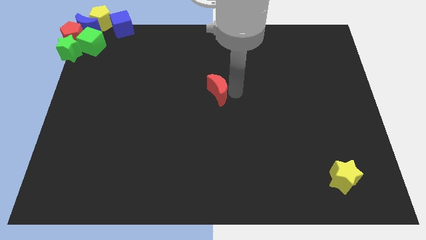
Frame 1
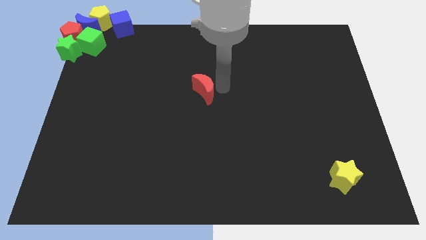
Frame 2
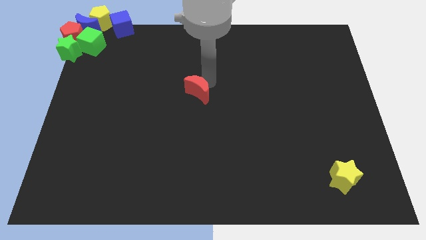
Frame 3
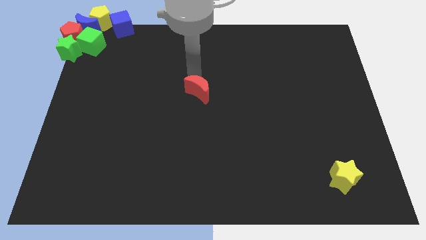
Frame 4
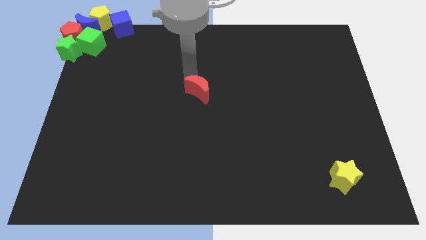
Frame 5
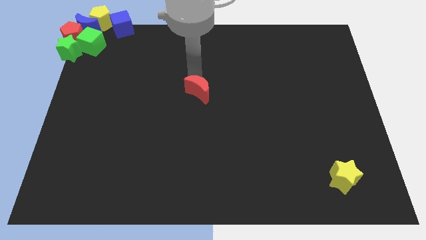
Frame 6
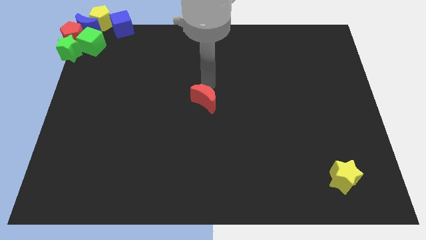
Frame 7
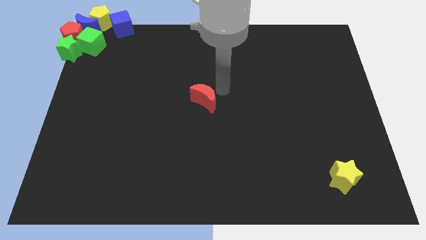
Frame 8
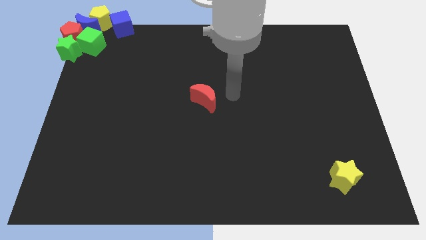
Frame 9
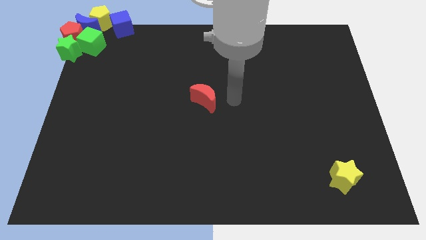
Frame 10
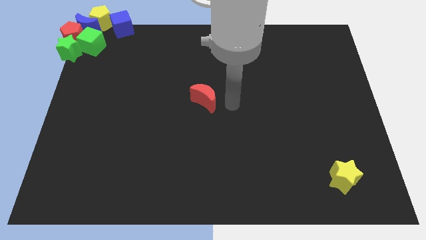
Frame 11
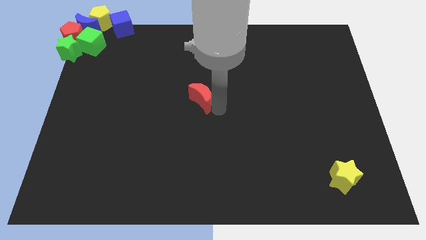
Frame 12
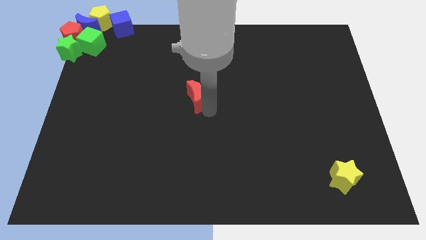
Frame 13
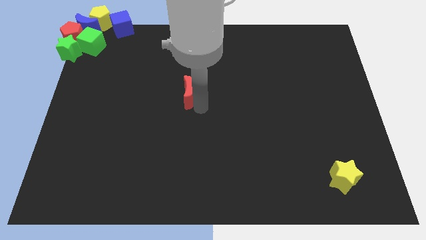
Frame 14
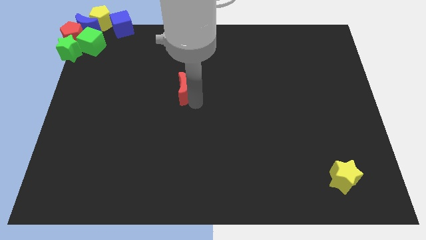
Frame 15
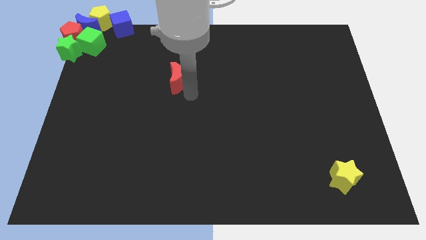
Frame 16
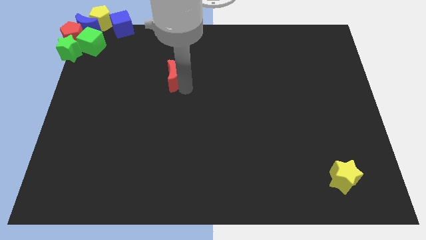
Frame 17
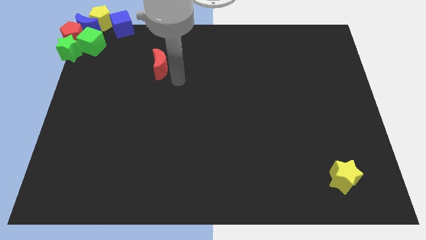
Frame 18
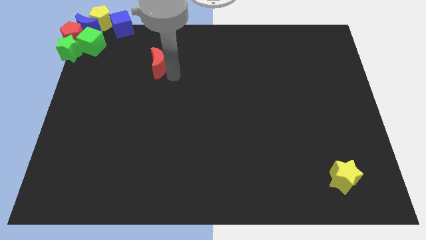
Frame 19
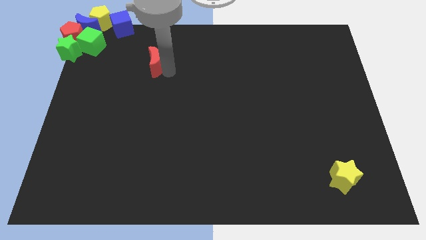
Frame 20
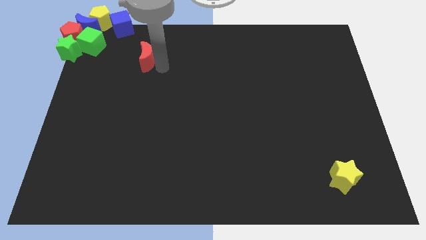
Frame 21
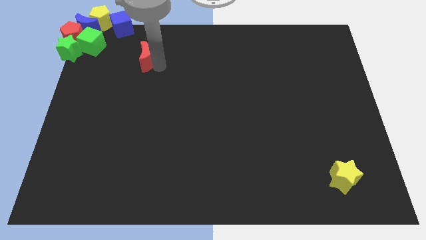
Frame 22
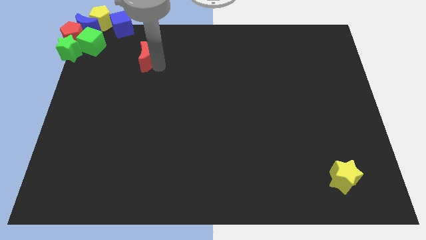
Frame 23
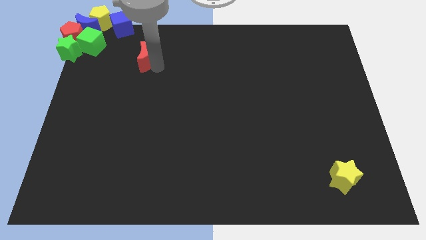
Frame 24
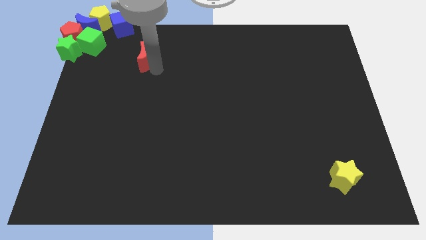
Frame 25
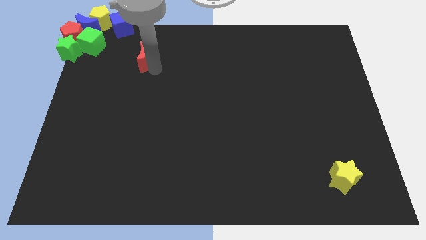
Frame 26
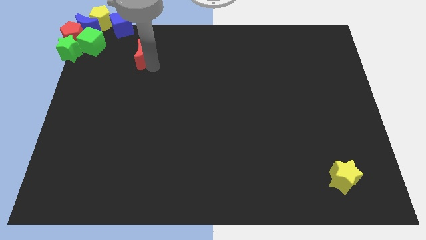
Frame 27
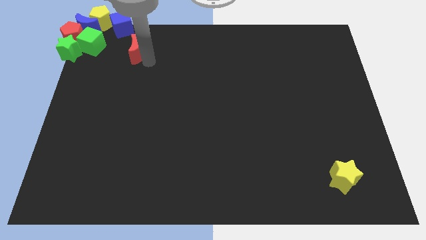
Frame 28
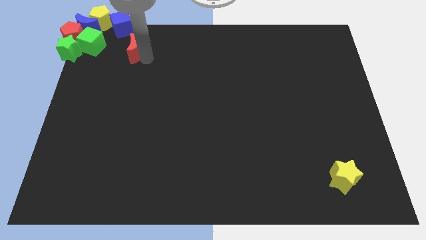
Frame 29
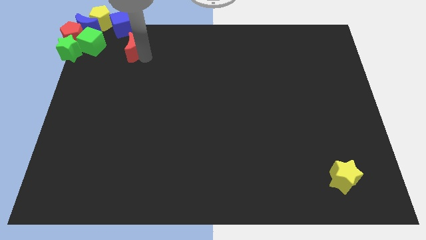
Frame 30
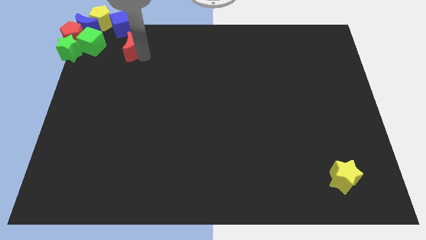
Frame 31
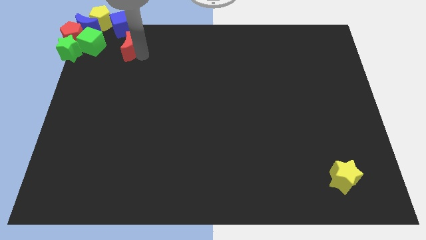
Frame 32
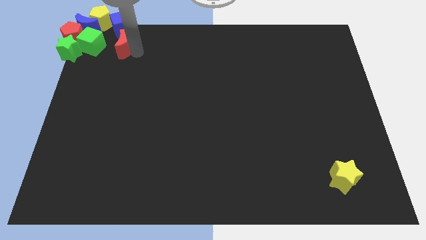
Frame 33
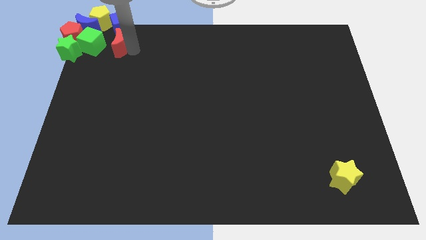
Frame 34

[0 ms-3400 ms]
move the red moon vertically below the blue cube

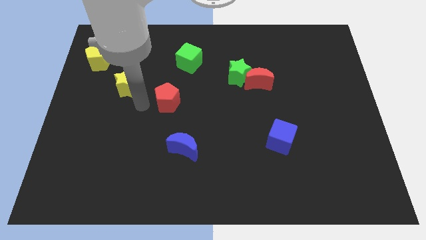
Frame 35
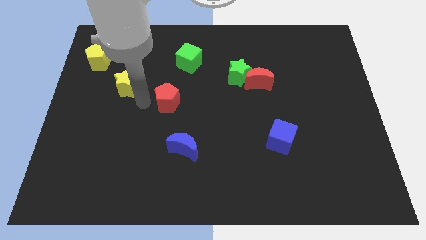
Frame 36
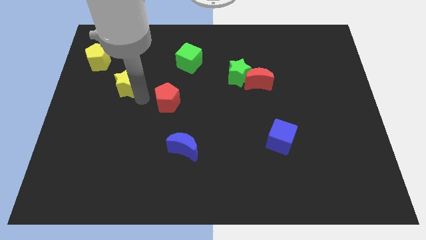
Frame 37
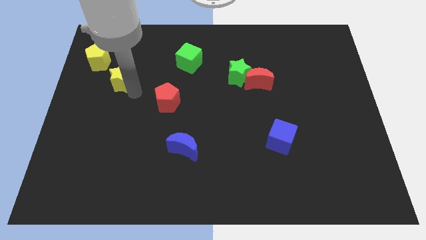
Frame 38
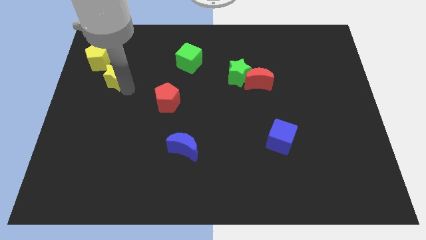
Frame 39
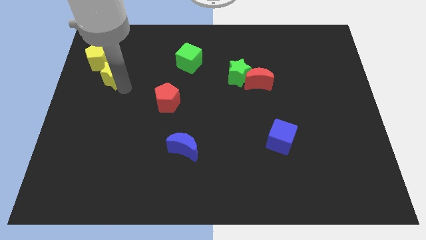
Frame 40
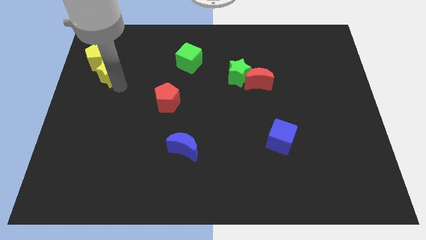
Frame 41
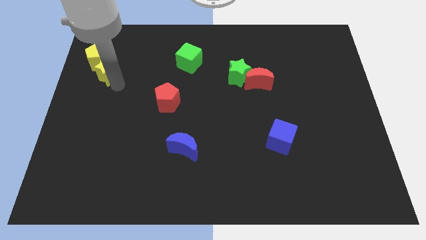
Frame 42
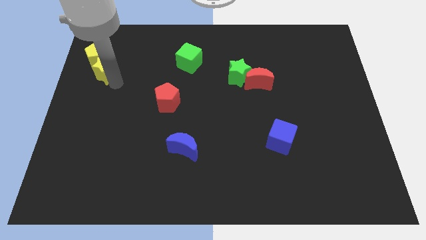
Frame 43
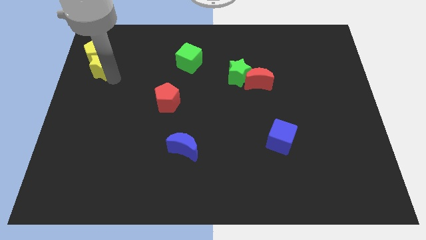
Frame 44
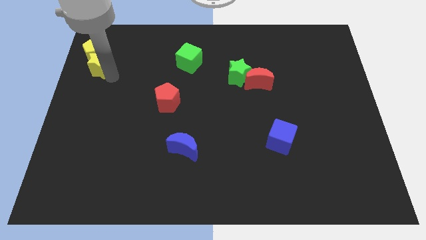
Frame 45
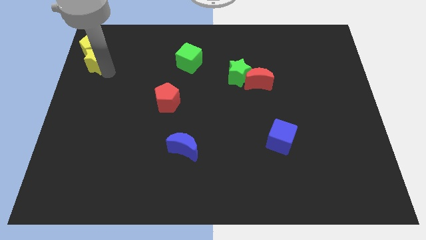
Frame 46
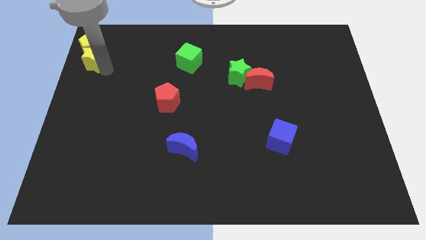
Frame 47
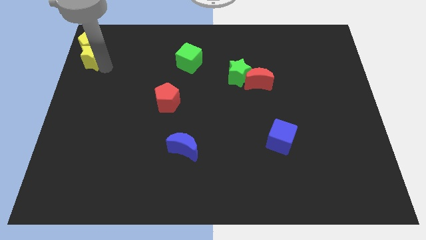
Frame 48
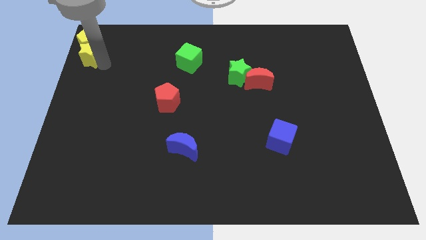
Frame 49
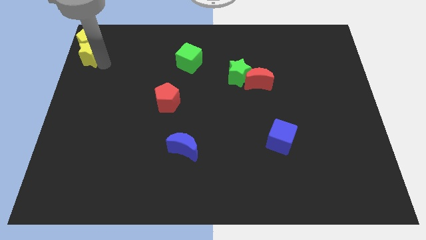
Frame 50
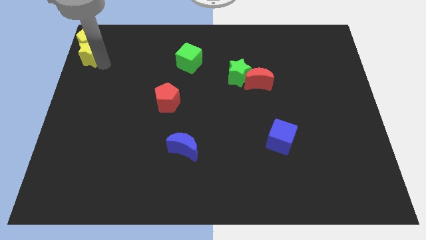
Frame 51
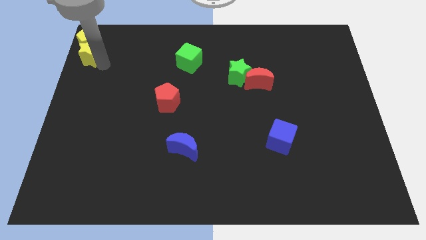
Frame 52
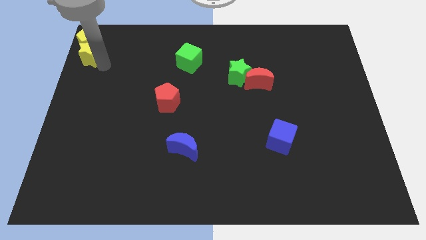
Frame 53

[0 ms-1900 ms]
push the yellow star into yellow pentagon

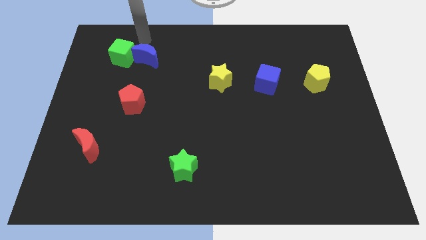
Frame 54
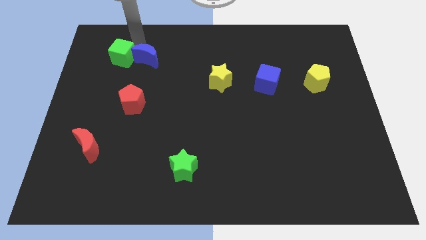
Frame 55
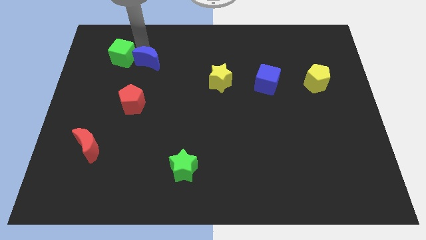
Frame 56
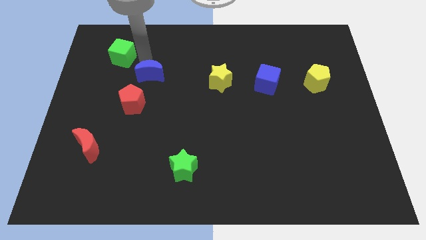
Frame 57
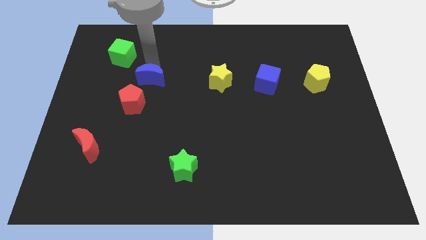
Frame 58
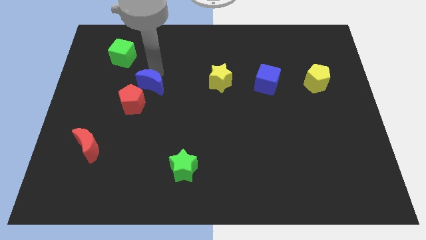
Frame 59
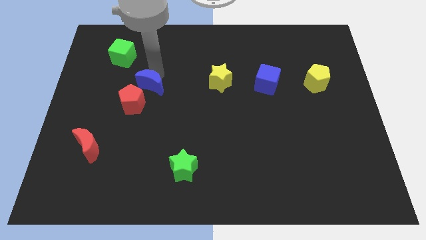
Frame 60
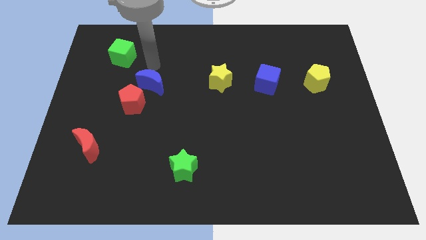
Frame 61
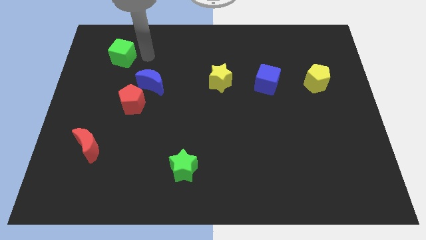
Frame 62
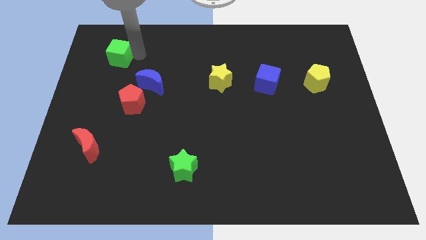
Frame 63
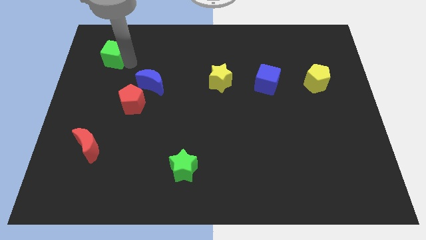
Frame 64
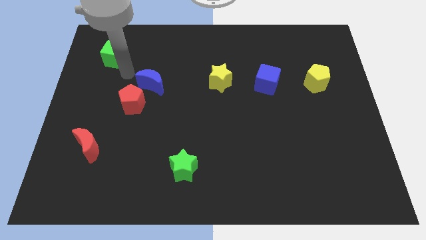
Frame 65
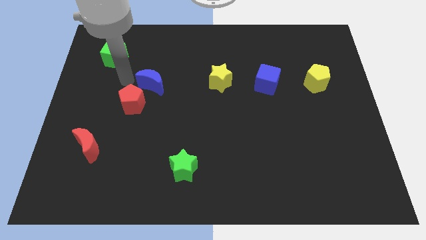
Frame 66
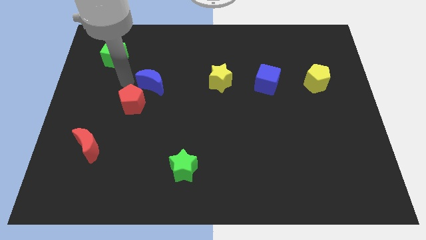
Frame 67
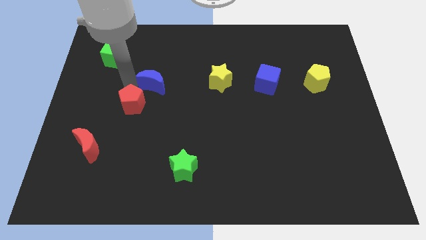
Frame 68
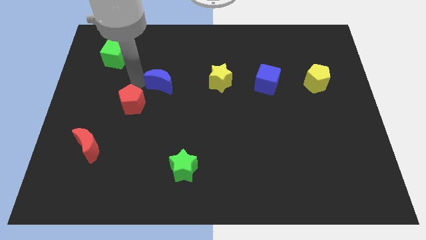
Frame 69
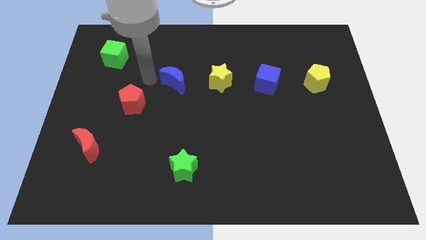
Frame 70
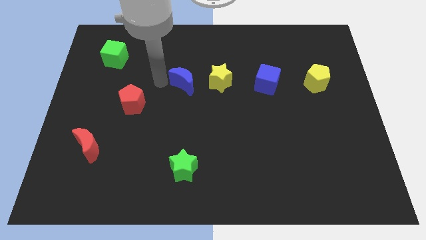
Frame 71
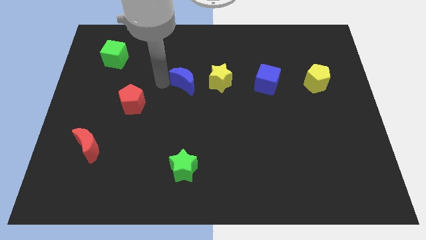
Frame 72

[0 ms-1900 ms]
place the blue moon to the left side of the yellow star

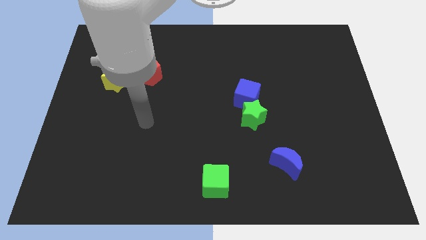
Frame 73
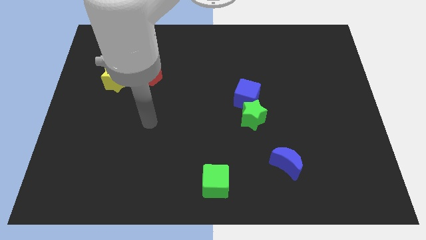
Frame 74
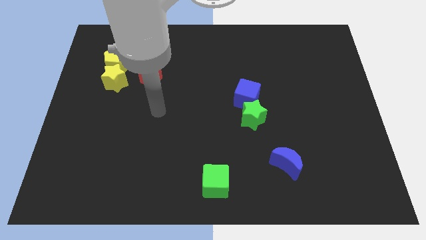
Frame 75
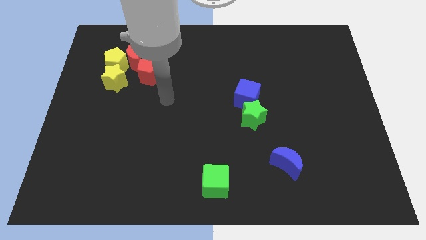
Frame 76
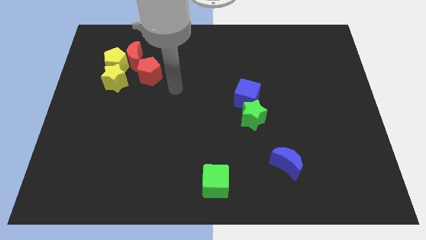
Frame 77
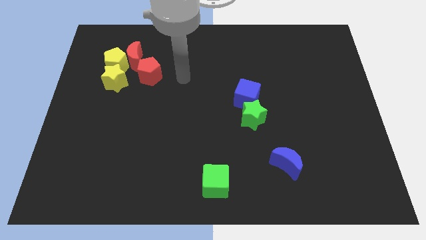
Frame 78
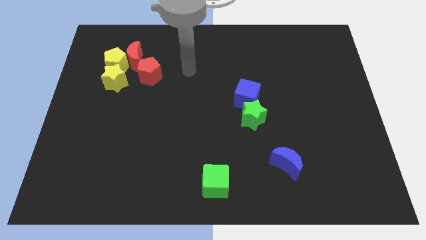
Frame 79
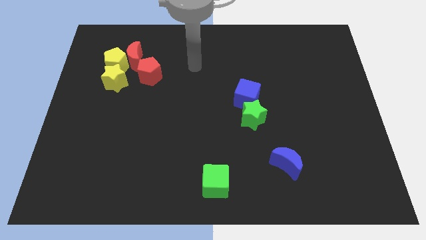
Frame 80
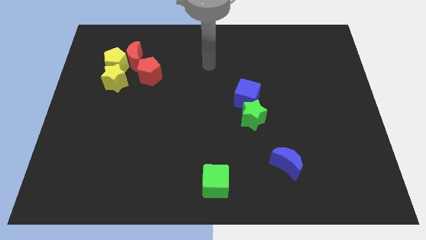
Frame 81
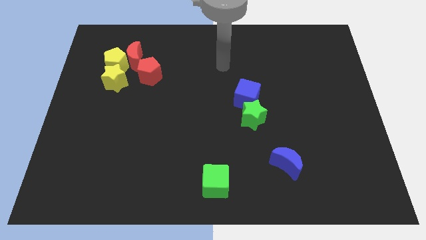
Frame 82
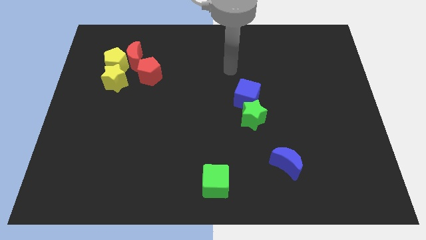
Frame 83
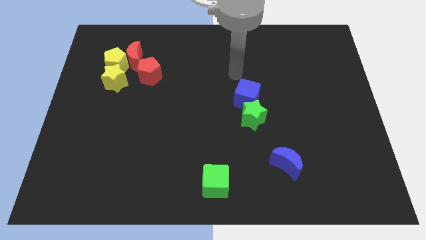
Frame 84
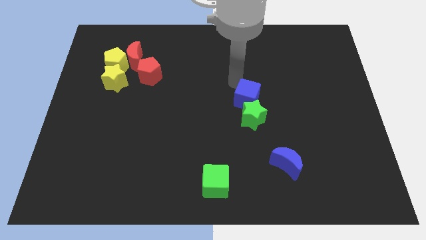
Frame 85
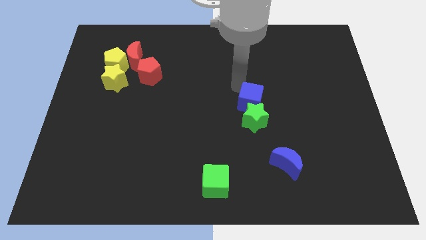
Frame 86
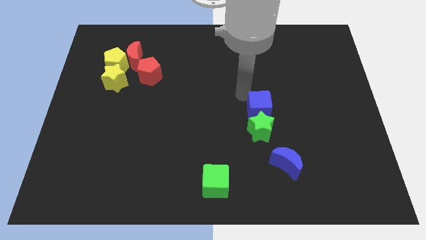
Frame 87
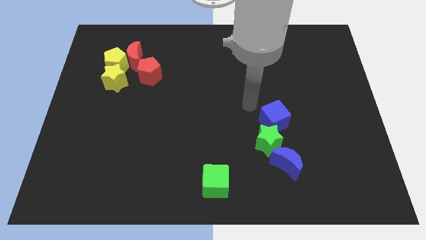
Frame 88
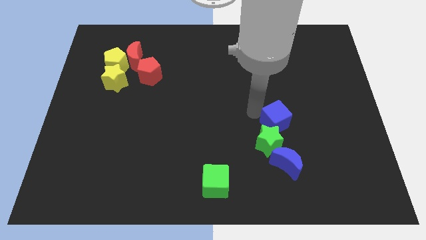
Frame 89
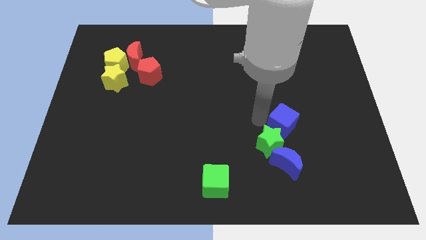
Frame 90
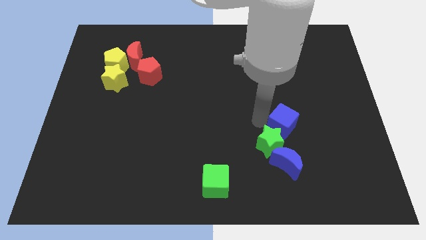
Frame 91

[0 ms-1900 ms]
slide the blue cube and the green star towards the bottom right
